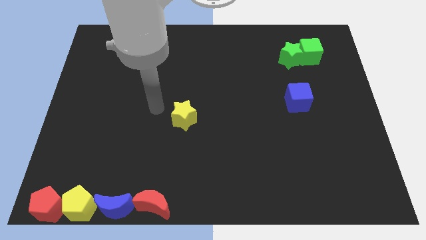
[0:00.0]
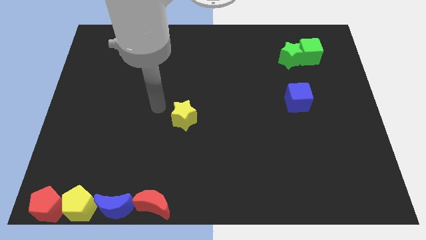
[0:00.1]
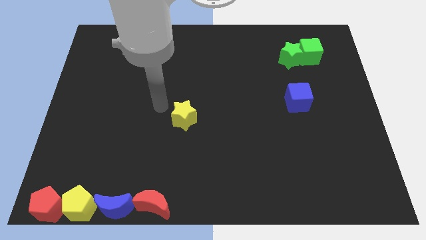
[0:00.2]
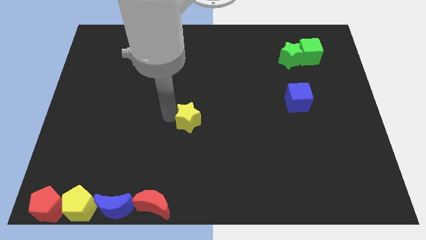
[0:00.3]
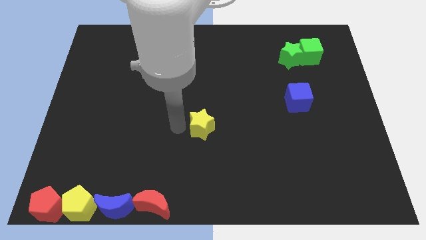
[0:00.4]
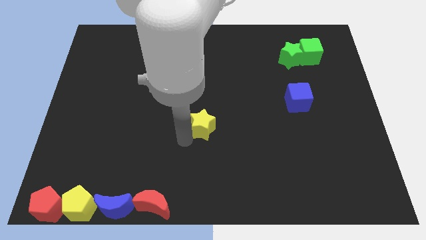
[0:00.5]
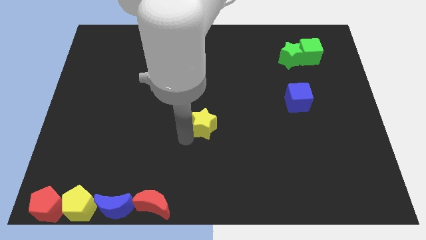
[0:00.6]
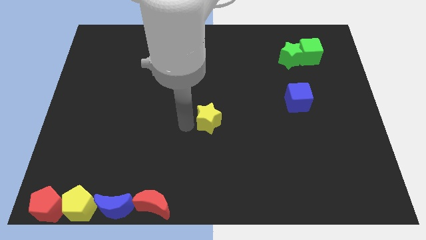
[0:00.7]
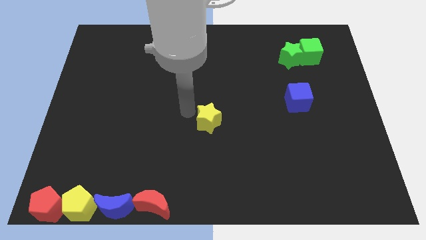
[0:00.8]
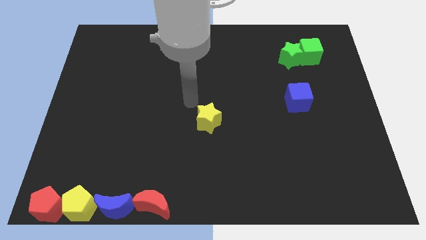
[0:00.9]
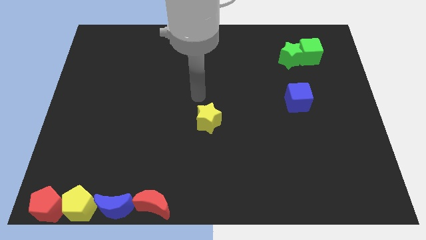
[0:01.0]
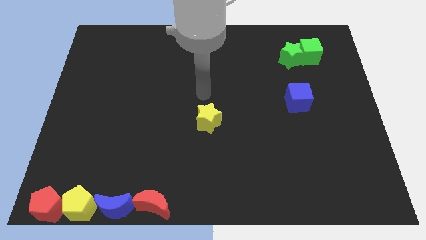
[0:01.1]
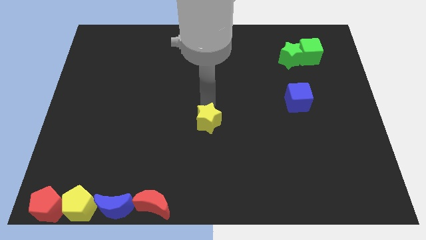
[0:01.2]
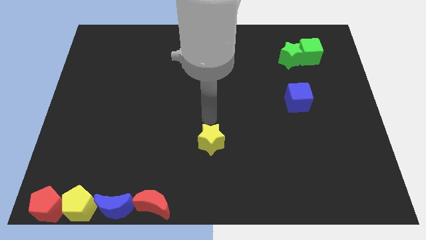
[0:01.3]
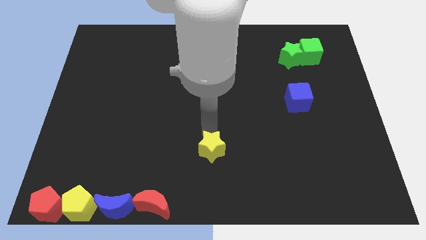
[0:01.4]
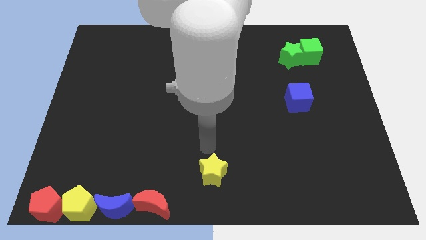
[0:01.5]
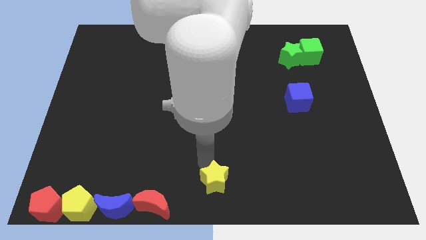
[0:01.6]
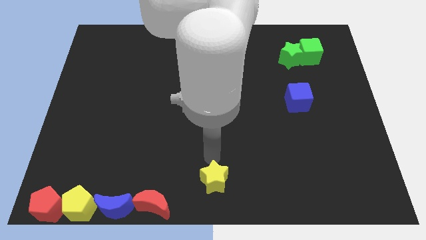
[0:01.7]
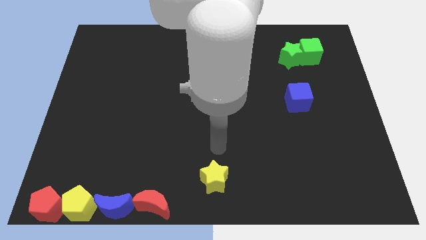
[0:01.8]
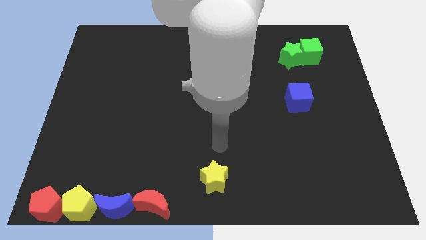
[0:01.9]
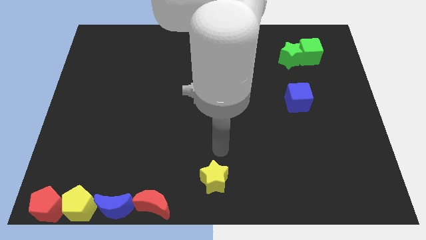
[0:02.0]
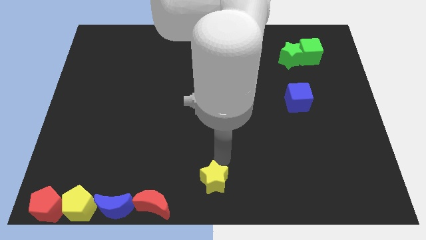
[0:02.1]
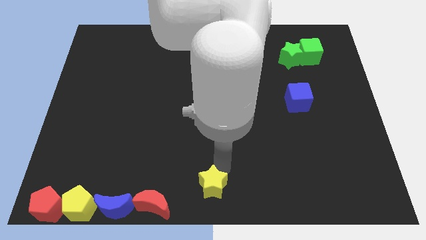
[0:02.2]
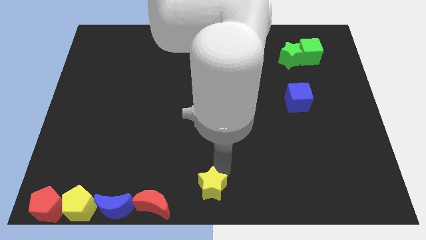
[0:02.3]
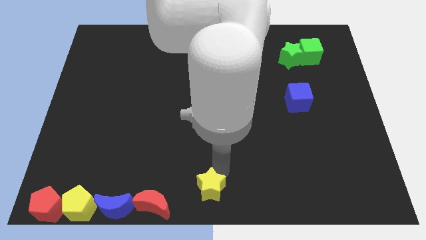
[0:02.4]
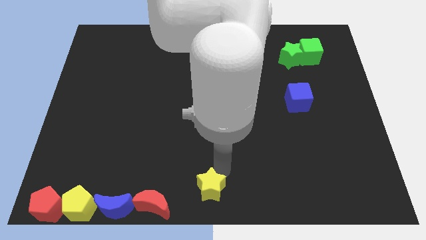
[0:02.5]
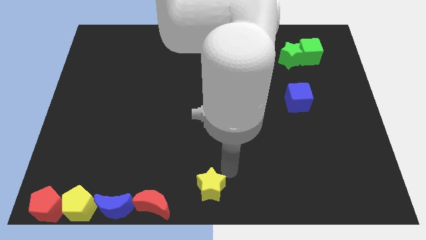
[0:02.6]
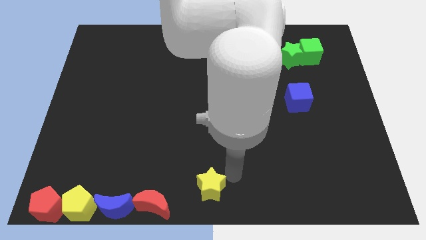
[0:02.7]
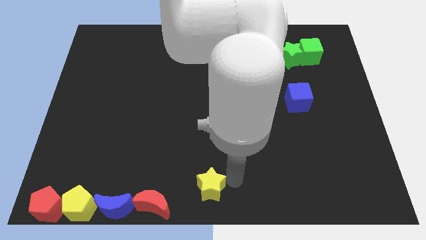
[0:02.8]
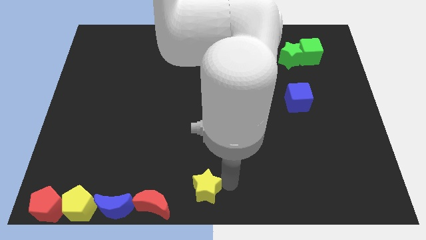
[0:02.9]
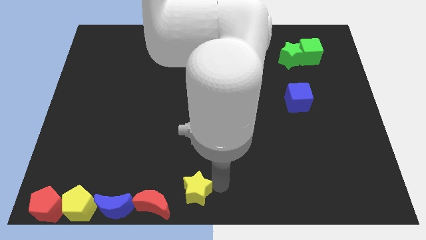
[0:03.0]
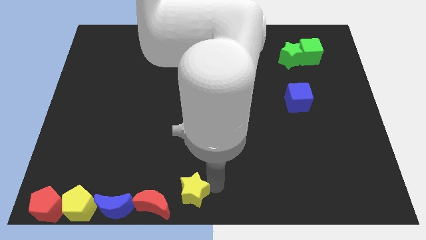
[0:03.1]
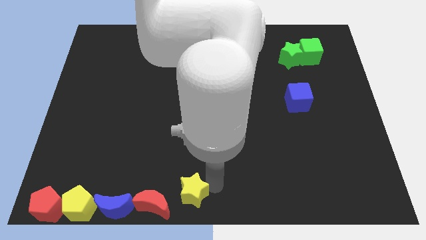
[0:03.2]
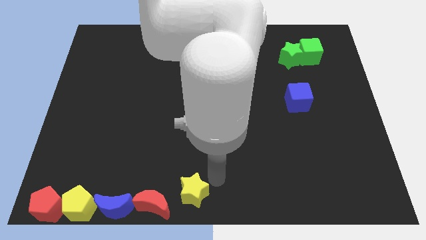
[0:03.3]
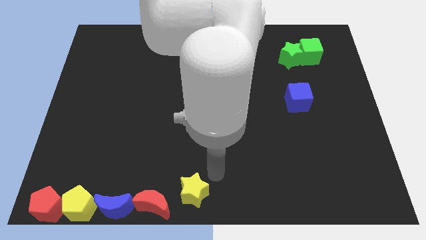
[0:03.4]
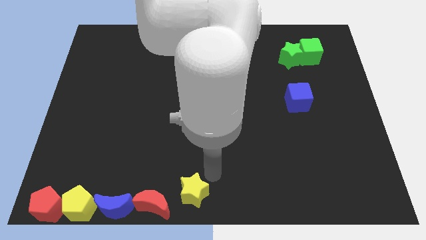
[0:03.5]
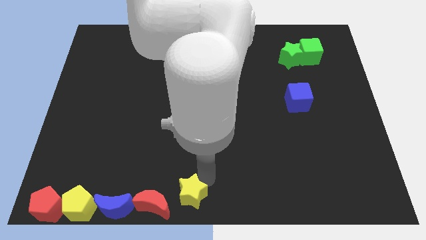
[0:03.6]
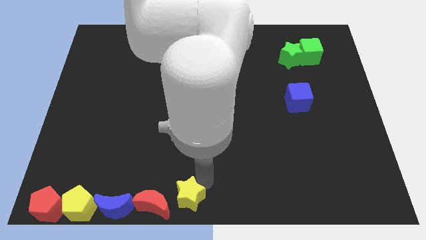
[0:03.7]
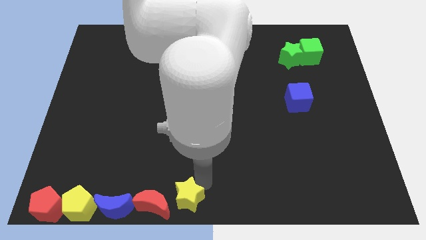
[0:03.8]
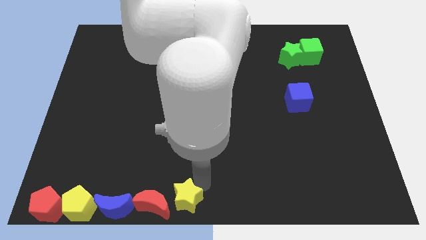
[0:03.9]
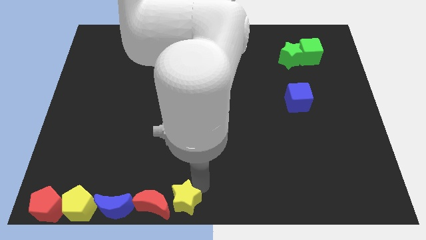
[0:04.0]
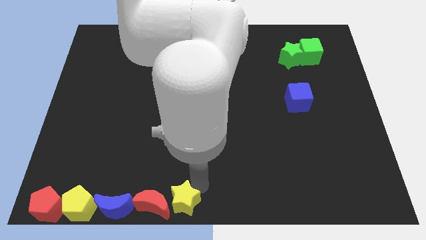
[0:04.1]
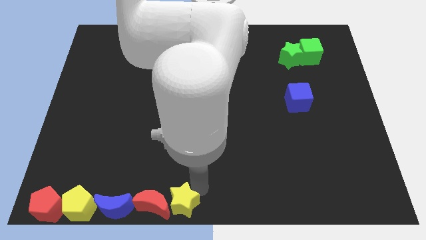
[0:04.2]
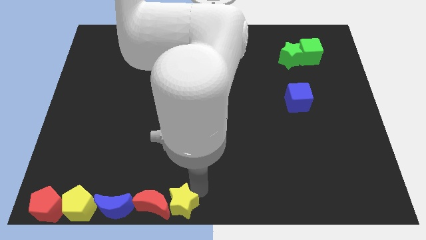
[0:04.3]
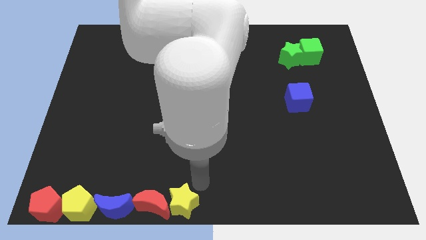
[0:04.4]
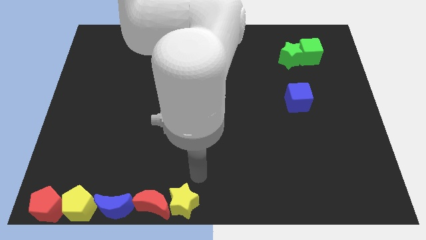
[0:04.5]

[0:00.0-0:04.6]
move the yellow star to the bottom center

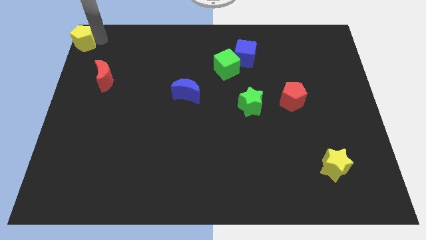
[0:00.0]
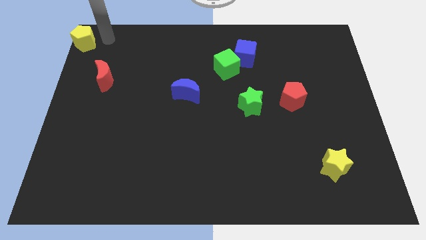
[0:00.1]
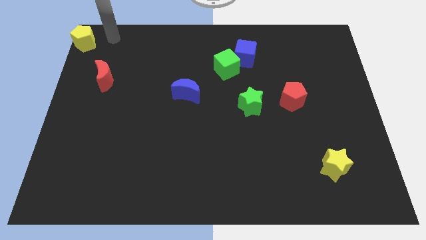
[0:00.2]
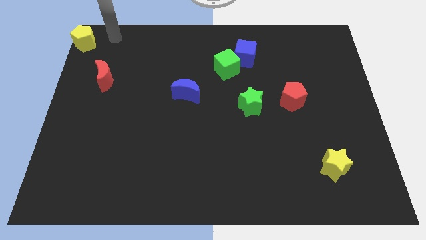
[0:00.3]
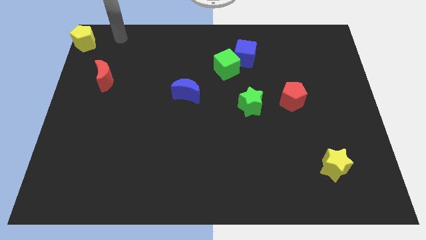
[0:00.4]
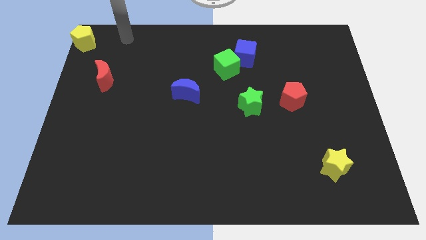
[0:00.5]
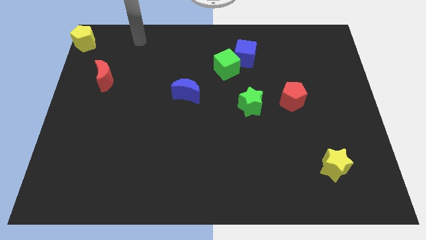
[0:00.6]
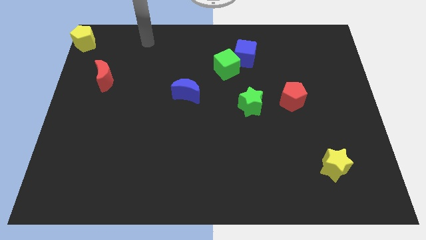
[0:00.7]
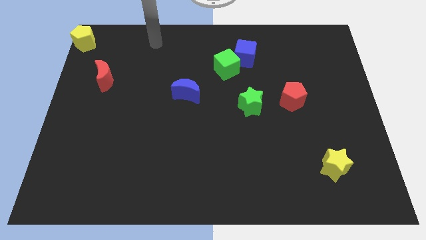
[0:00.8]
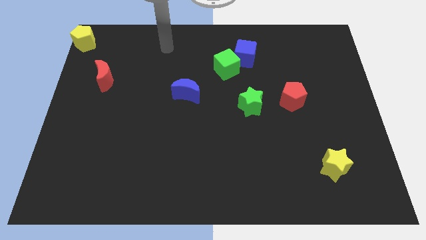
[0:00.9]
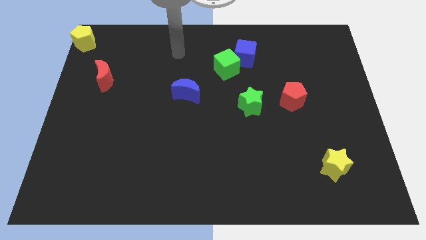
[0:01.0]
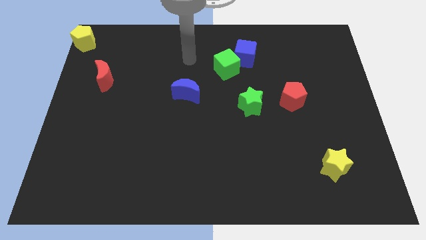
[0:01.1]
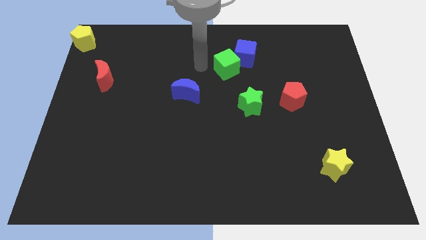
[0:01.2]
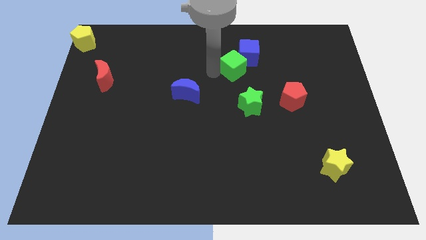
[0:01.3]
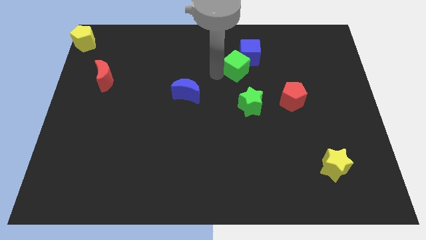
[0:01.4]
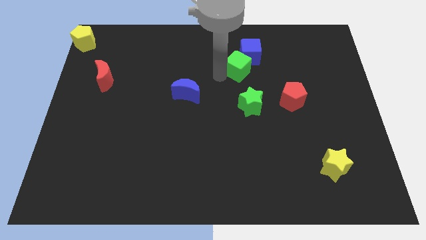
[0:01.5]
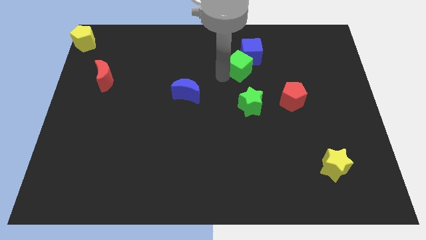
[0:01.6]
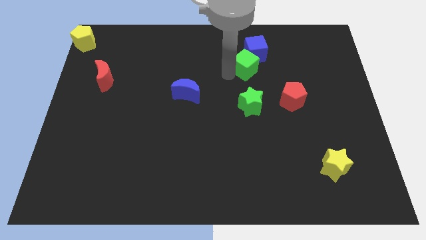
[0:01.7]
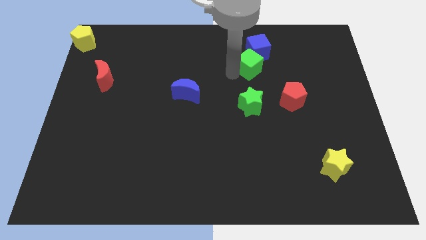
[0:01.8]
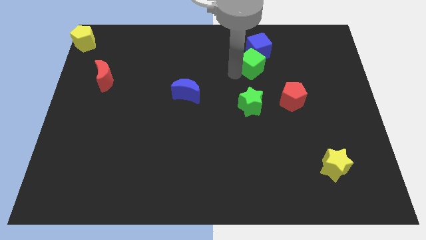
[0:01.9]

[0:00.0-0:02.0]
put the green cube vertically above the green star

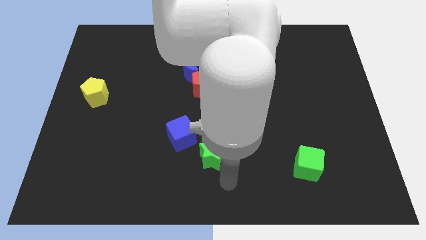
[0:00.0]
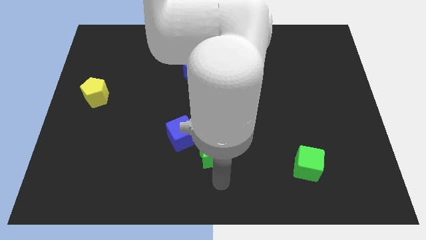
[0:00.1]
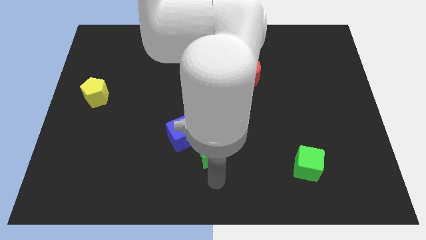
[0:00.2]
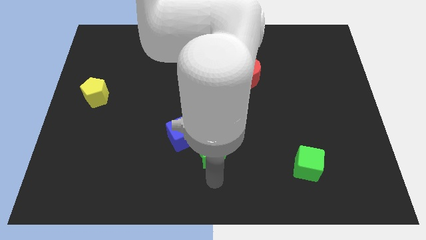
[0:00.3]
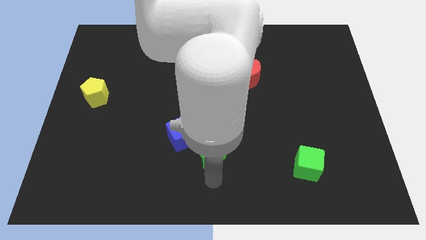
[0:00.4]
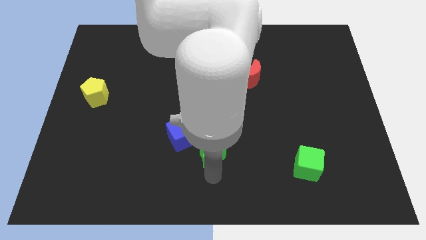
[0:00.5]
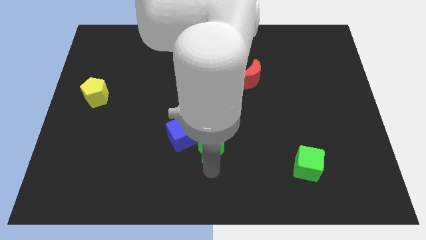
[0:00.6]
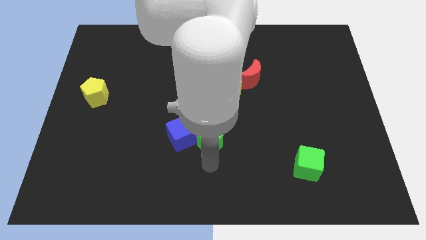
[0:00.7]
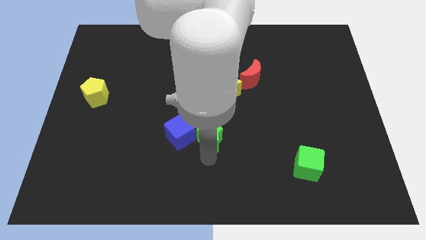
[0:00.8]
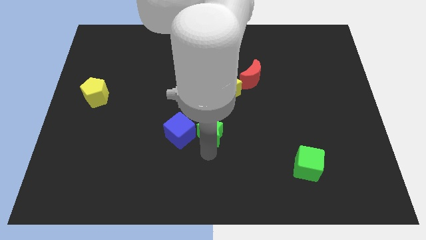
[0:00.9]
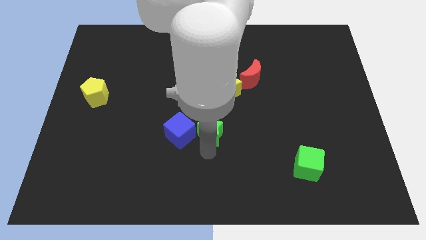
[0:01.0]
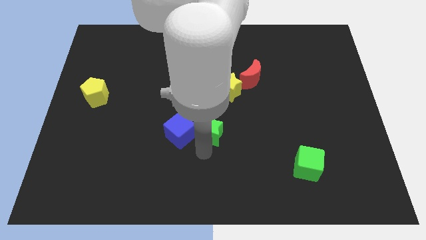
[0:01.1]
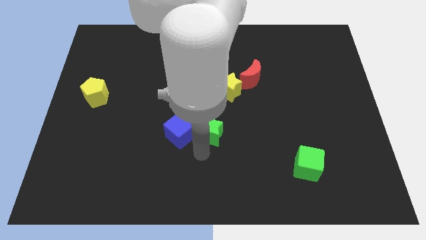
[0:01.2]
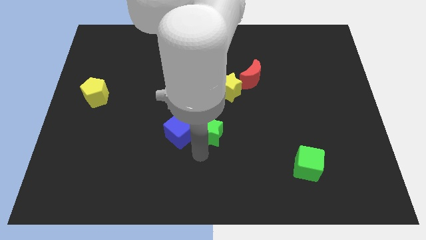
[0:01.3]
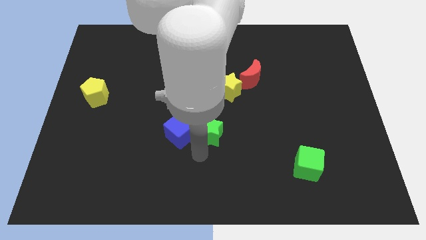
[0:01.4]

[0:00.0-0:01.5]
push the green star right to the blue cube

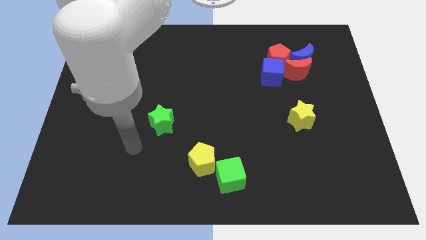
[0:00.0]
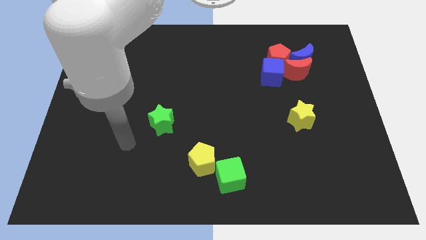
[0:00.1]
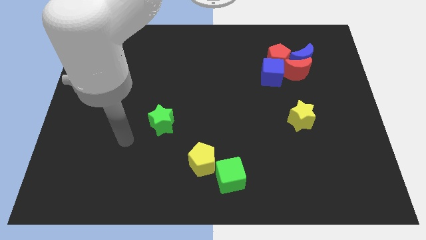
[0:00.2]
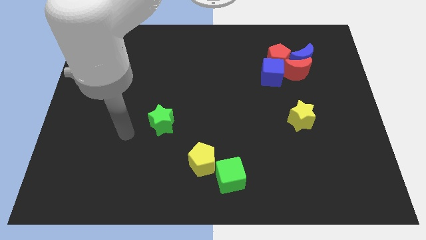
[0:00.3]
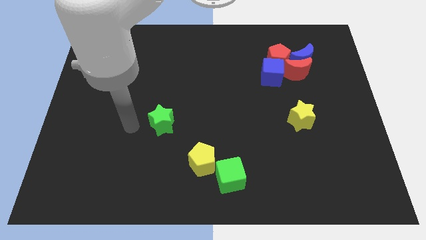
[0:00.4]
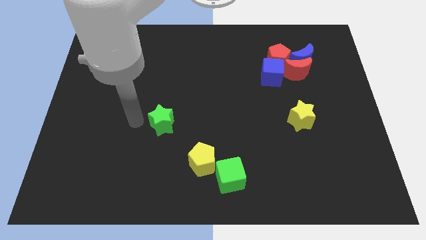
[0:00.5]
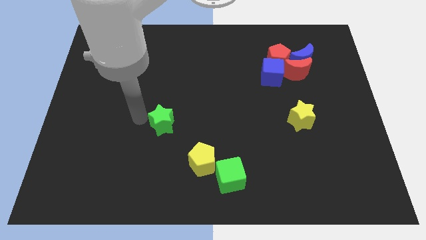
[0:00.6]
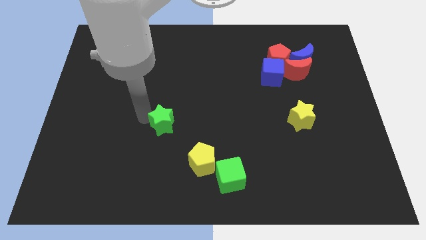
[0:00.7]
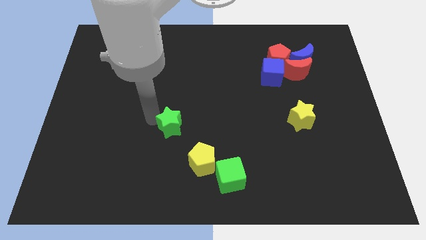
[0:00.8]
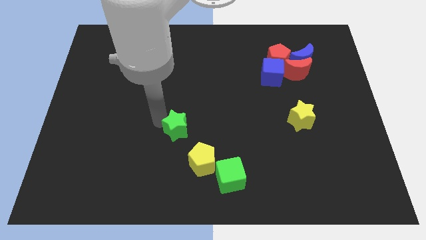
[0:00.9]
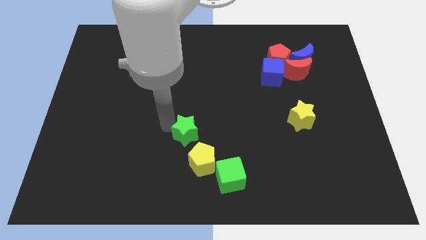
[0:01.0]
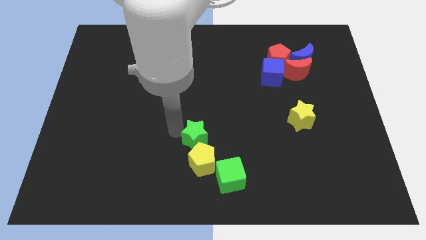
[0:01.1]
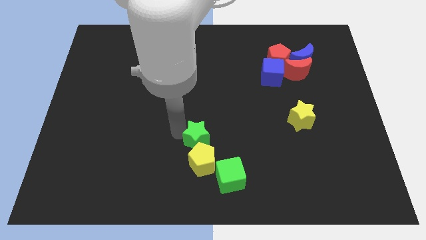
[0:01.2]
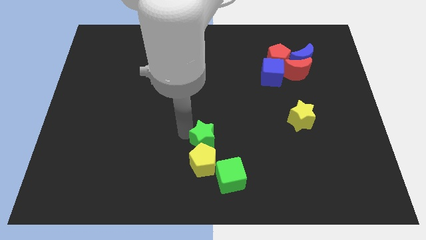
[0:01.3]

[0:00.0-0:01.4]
place the green star above the yellow pentagon
